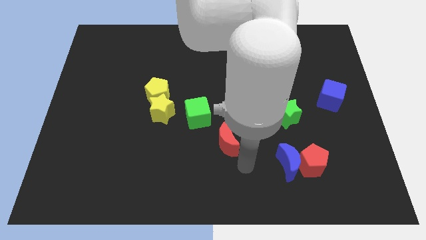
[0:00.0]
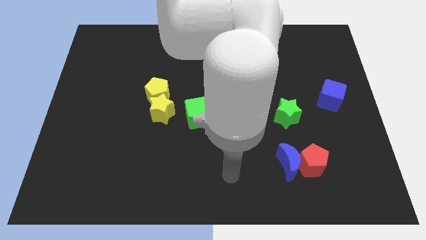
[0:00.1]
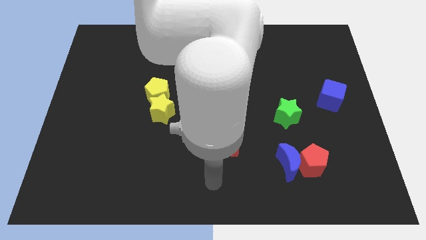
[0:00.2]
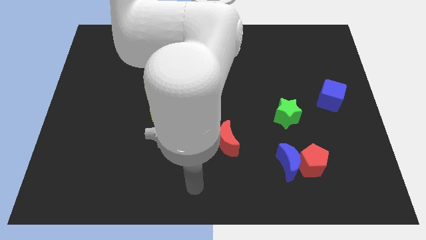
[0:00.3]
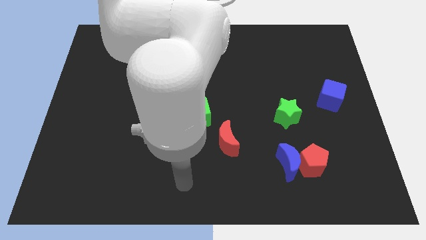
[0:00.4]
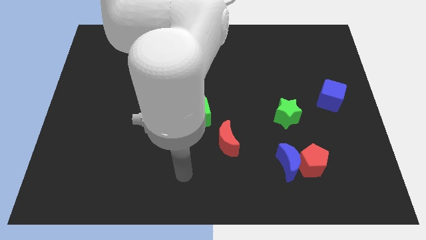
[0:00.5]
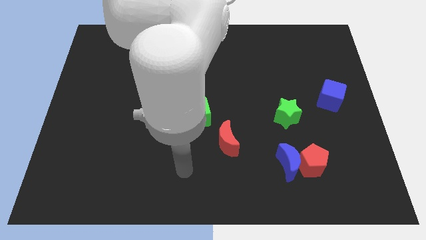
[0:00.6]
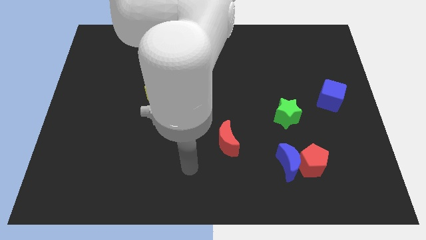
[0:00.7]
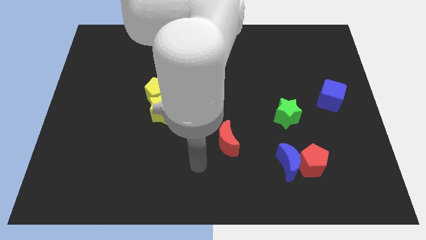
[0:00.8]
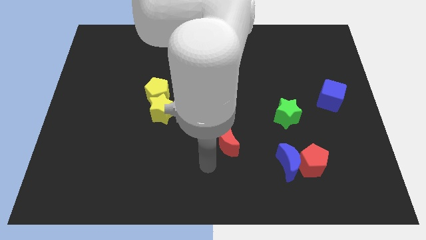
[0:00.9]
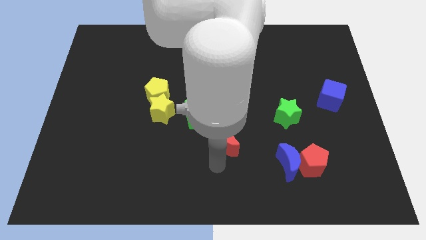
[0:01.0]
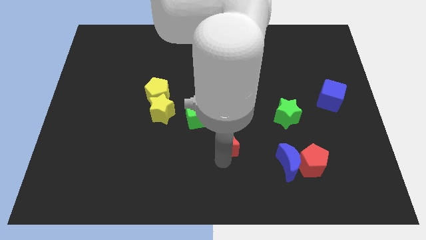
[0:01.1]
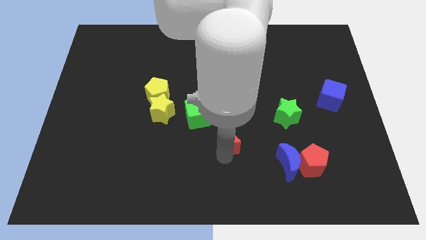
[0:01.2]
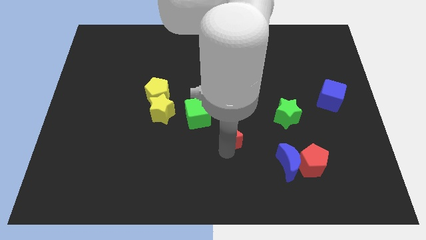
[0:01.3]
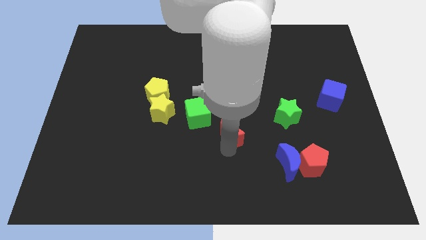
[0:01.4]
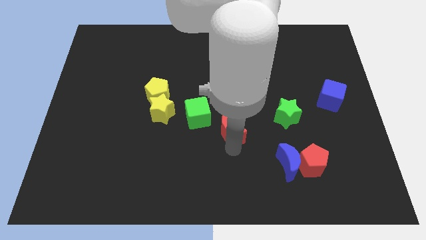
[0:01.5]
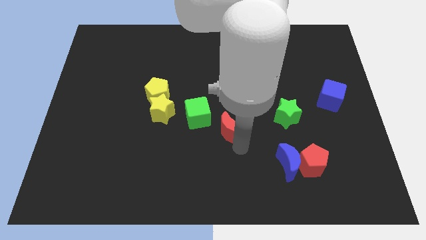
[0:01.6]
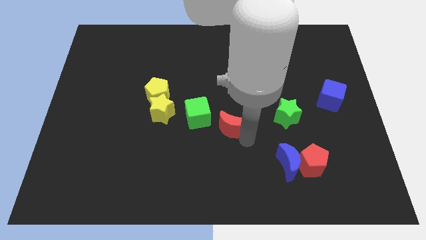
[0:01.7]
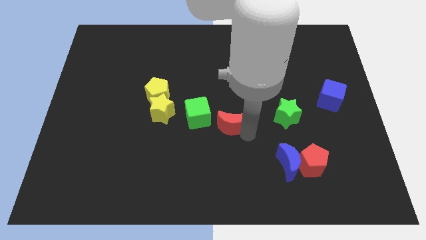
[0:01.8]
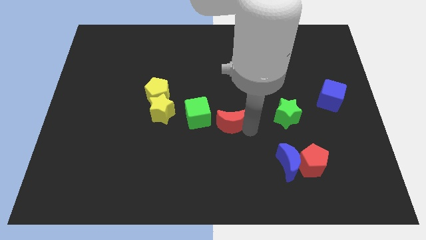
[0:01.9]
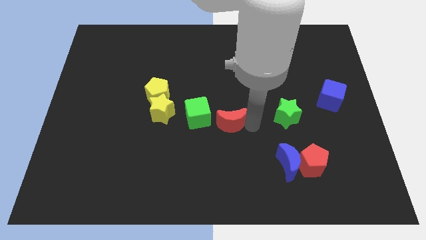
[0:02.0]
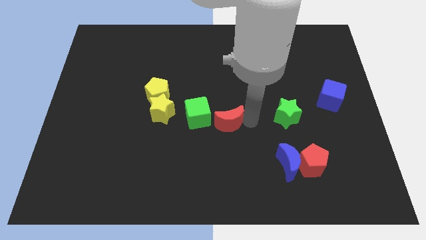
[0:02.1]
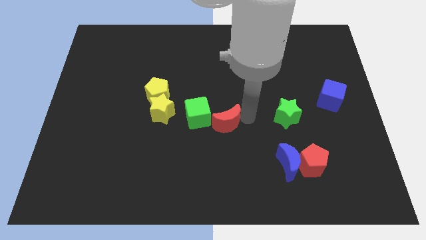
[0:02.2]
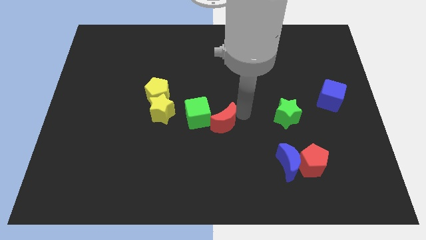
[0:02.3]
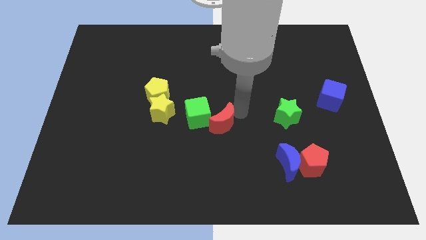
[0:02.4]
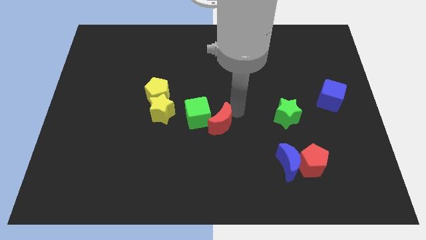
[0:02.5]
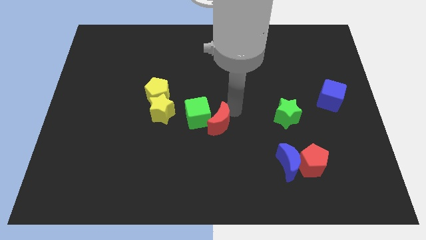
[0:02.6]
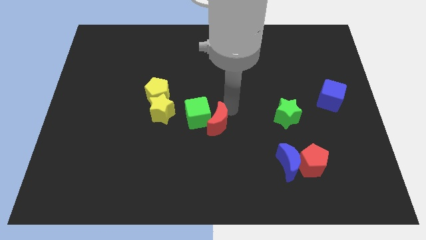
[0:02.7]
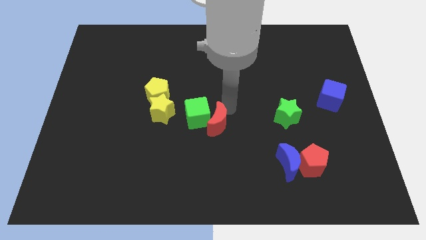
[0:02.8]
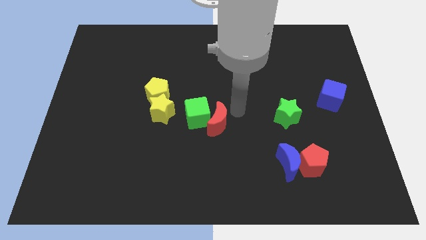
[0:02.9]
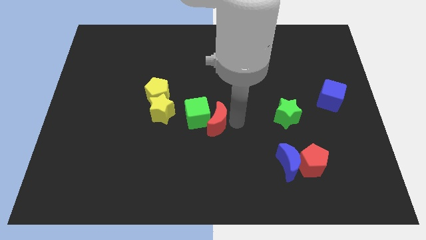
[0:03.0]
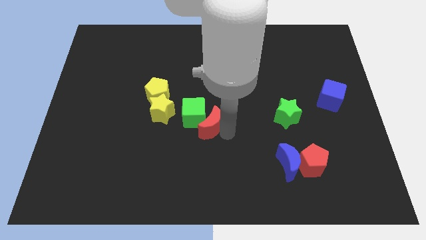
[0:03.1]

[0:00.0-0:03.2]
push the red moon into the green cube

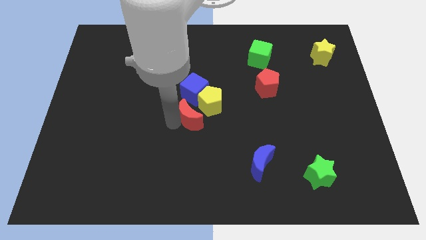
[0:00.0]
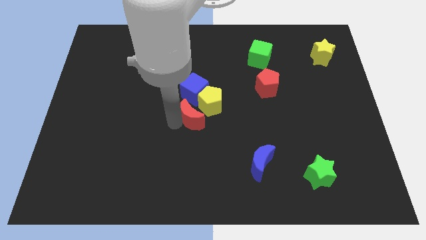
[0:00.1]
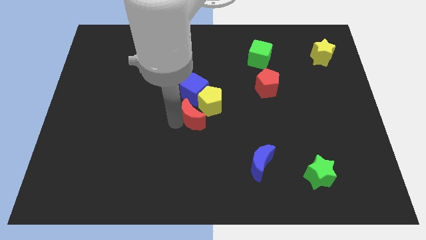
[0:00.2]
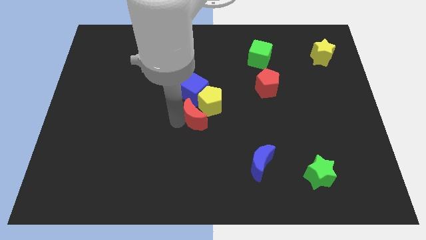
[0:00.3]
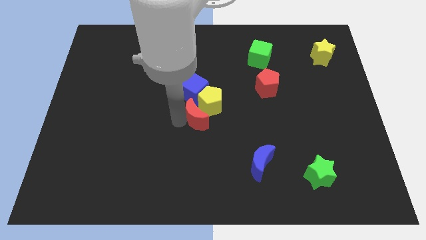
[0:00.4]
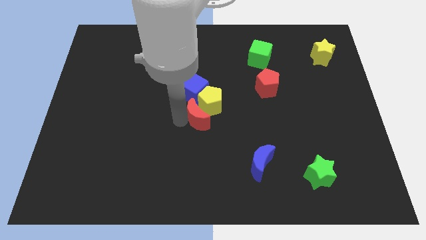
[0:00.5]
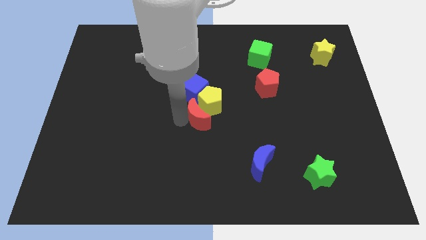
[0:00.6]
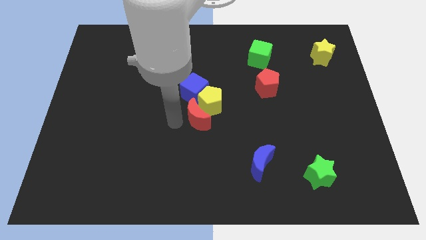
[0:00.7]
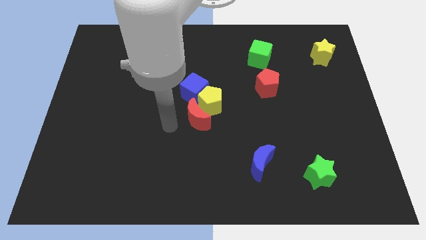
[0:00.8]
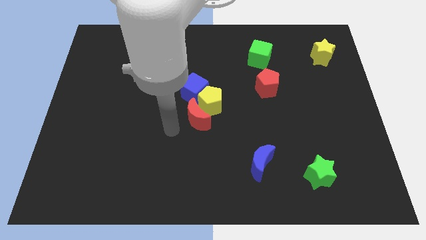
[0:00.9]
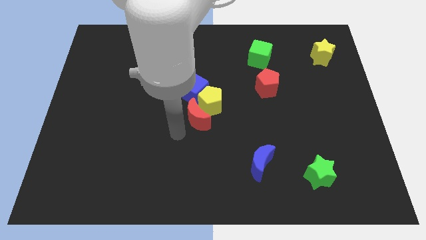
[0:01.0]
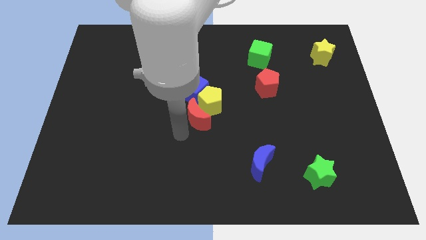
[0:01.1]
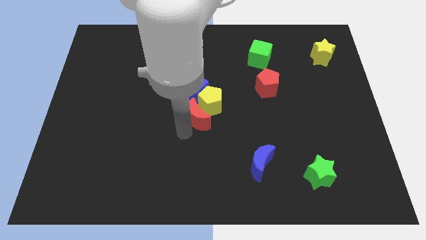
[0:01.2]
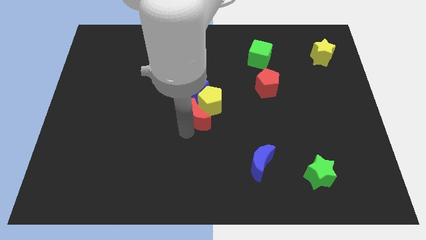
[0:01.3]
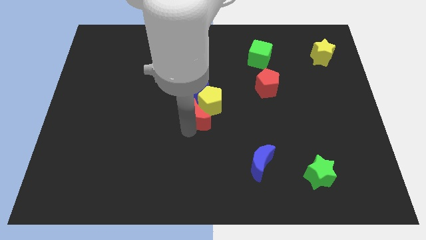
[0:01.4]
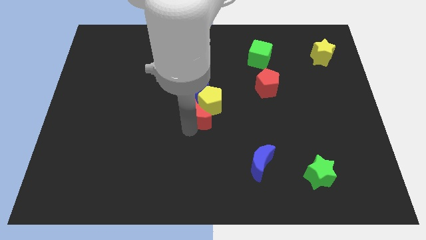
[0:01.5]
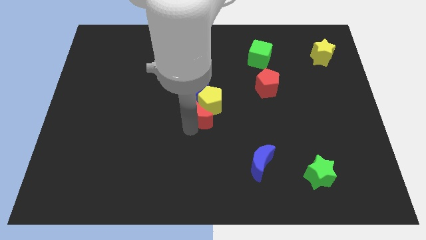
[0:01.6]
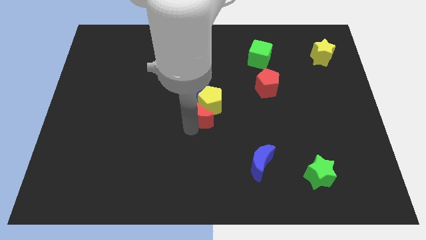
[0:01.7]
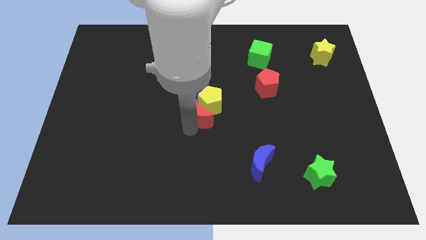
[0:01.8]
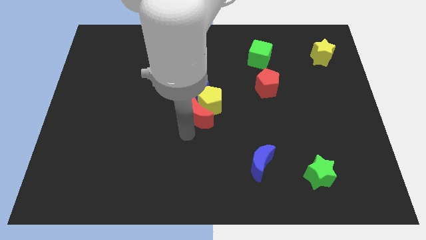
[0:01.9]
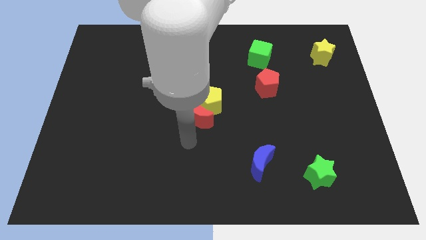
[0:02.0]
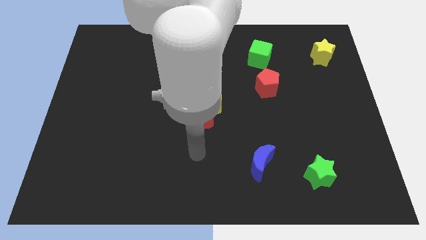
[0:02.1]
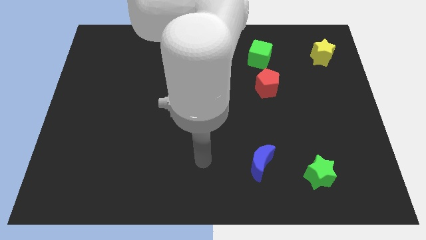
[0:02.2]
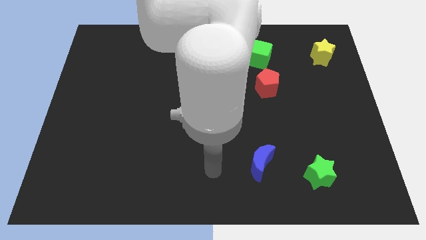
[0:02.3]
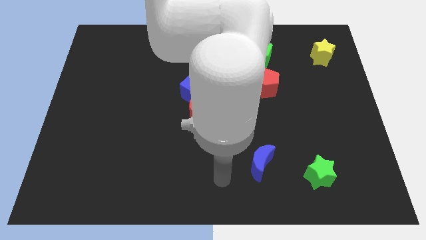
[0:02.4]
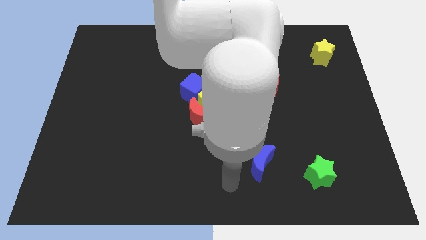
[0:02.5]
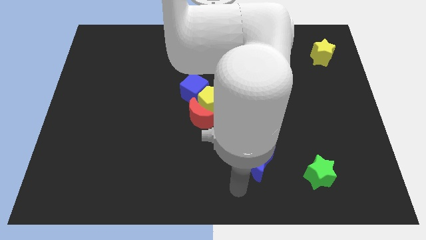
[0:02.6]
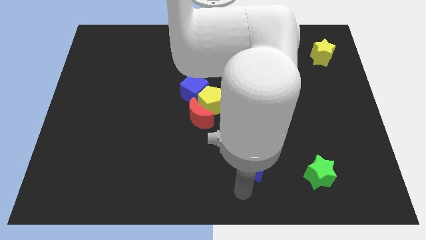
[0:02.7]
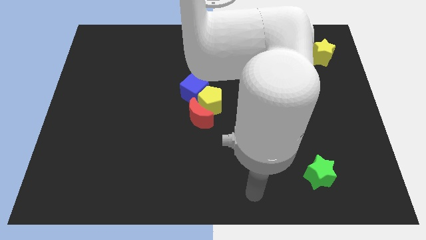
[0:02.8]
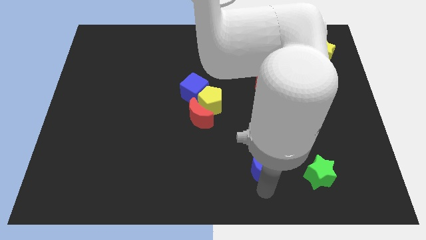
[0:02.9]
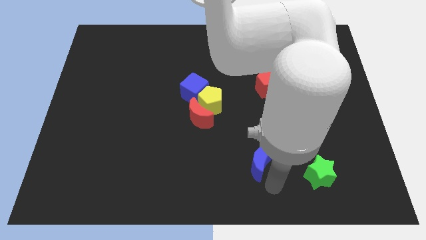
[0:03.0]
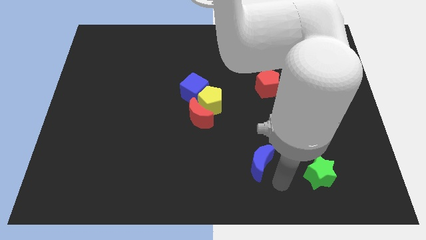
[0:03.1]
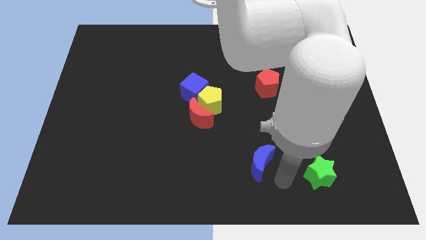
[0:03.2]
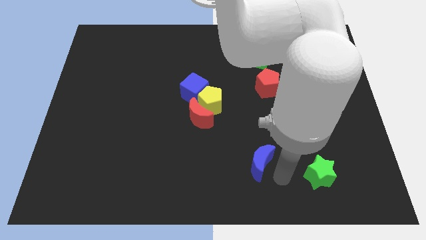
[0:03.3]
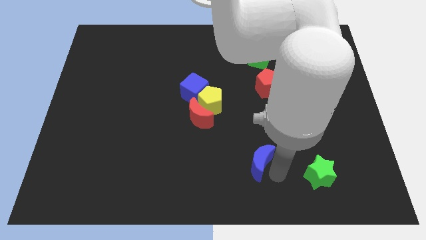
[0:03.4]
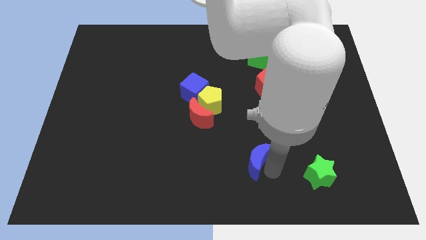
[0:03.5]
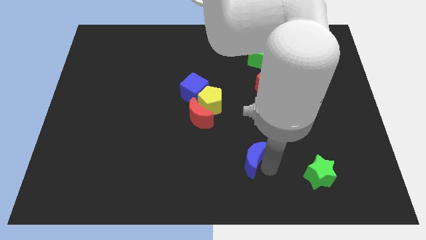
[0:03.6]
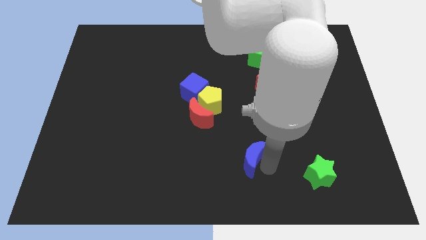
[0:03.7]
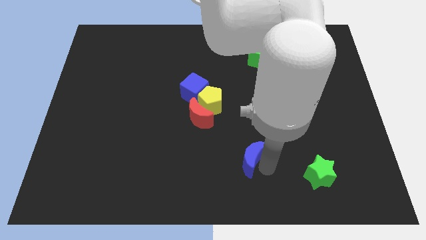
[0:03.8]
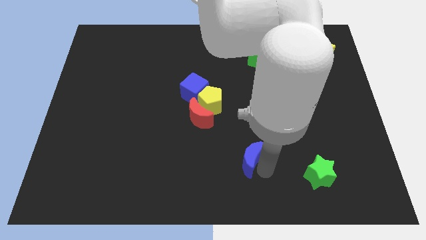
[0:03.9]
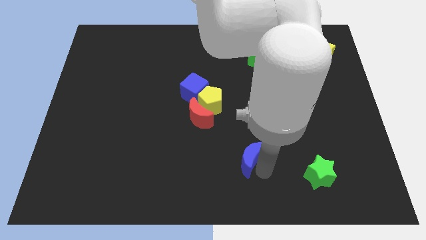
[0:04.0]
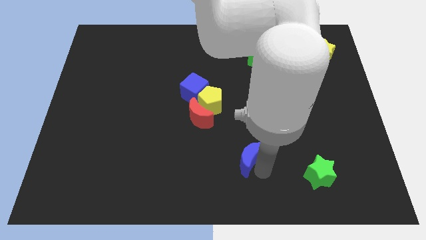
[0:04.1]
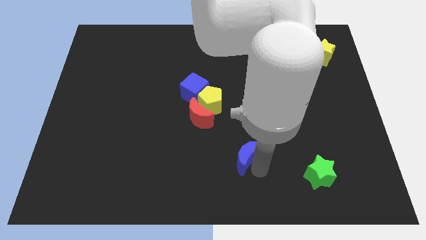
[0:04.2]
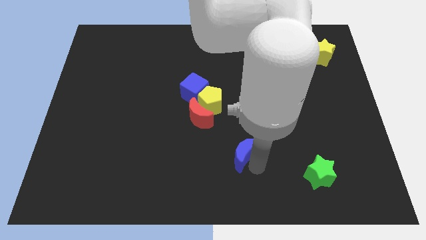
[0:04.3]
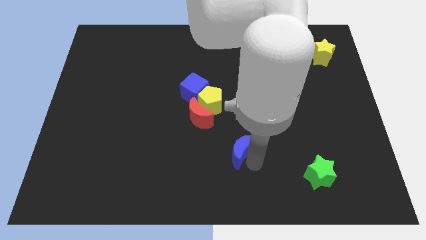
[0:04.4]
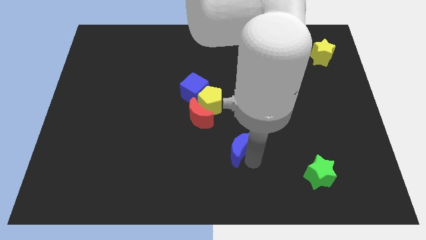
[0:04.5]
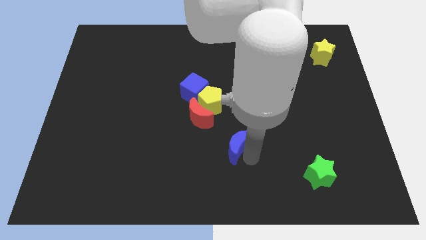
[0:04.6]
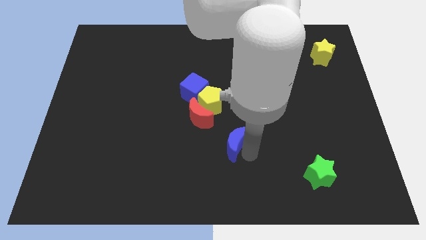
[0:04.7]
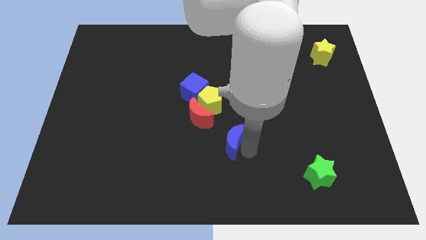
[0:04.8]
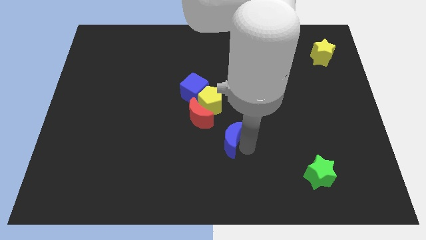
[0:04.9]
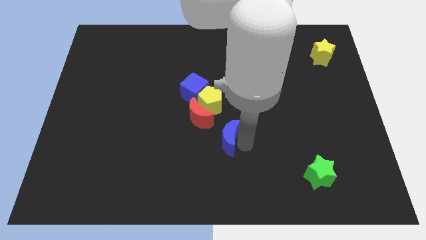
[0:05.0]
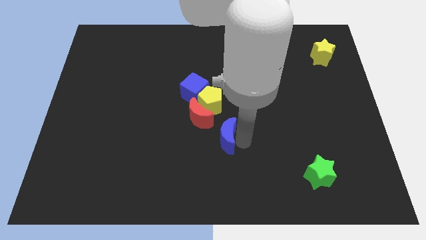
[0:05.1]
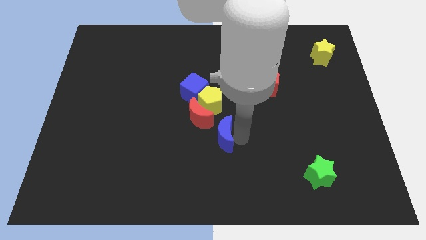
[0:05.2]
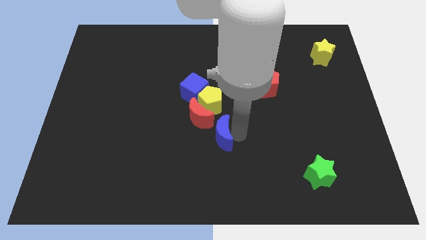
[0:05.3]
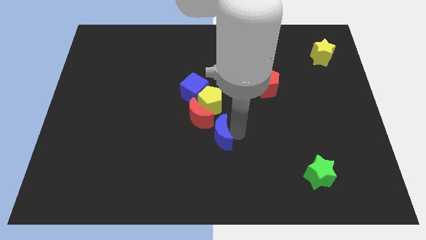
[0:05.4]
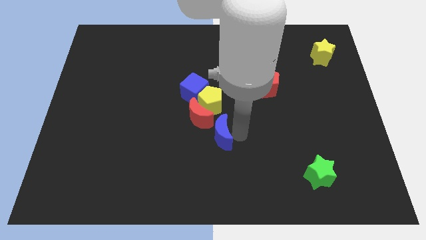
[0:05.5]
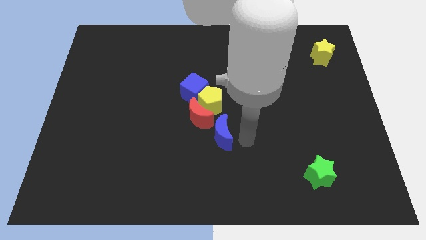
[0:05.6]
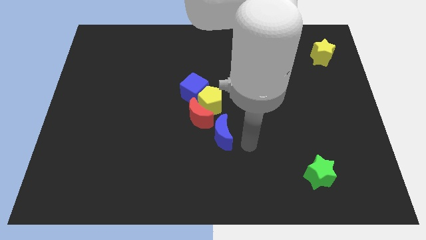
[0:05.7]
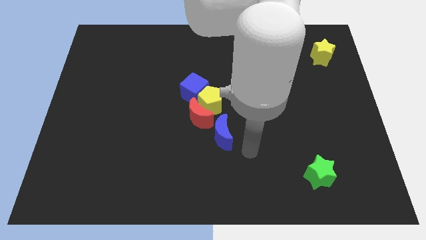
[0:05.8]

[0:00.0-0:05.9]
place the blue crescent below the yellow pentagon
